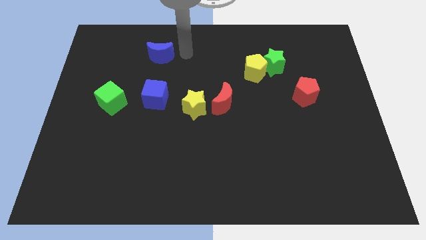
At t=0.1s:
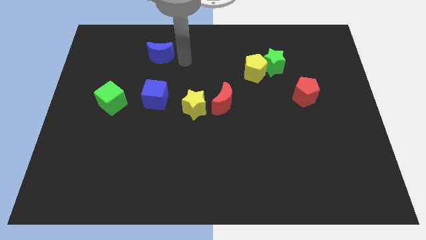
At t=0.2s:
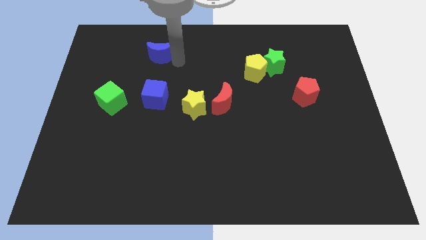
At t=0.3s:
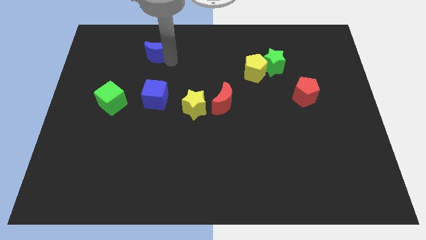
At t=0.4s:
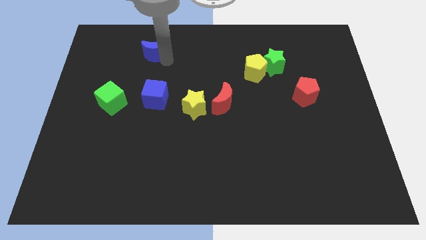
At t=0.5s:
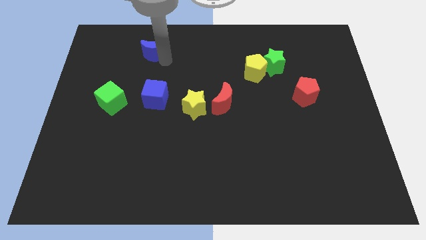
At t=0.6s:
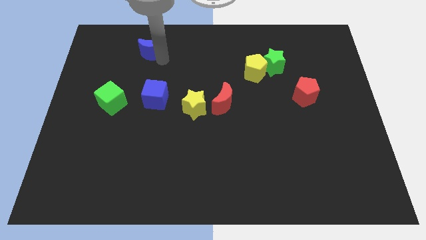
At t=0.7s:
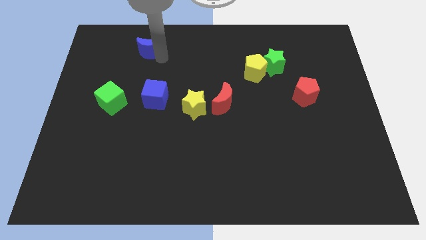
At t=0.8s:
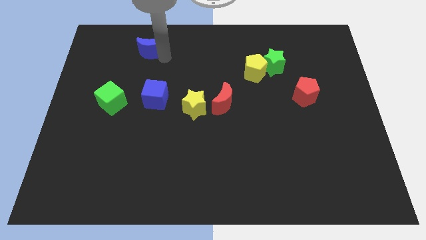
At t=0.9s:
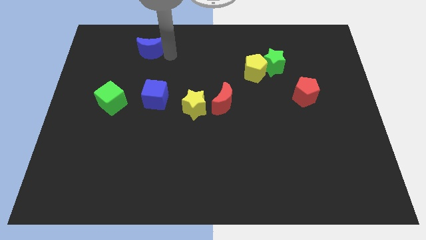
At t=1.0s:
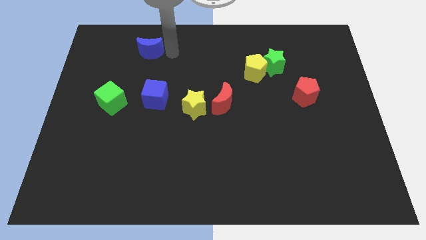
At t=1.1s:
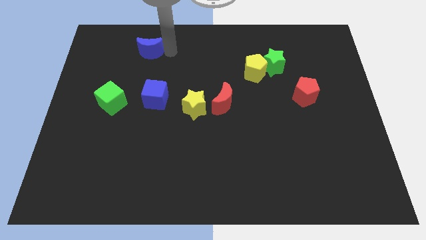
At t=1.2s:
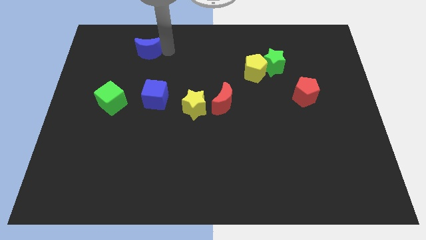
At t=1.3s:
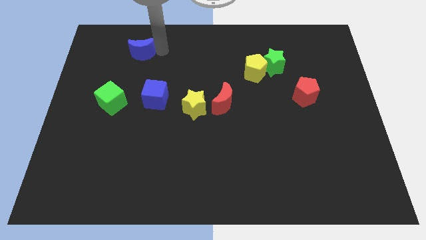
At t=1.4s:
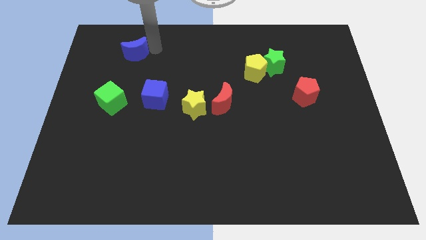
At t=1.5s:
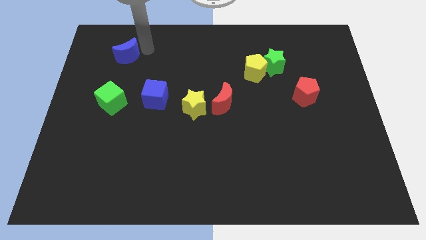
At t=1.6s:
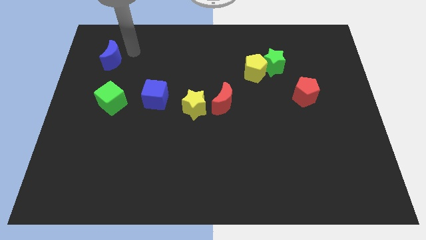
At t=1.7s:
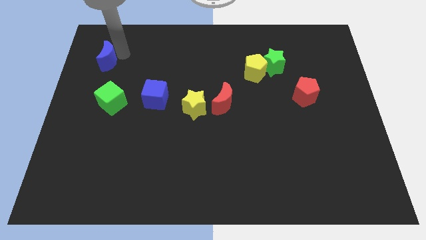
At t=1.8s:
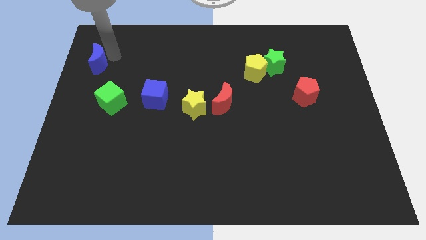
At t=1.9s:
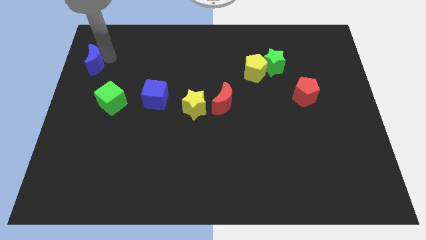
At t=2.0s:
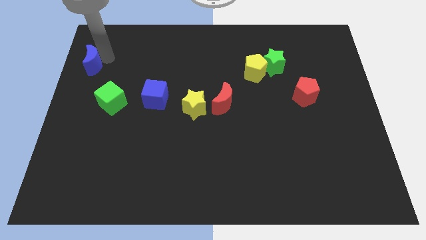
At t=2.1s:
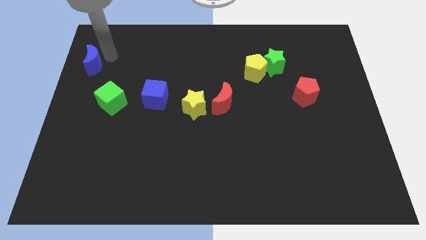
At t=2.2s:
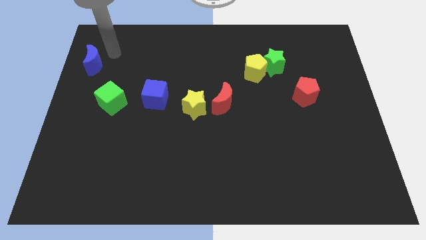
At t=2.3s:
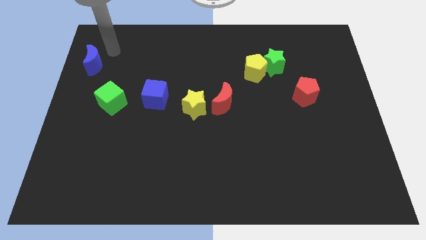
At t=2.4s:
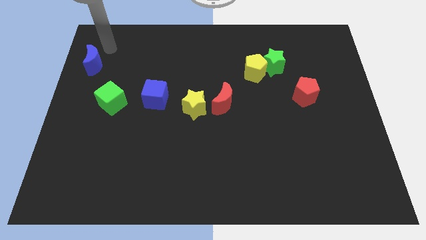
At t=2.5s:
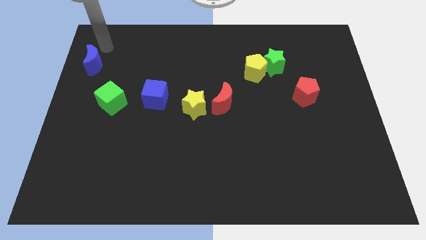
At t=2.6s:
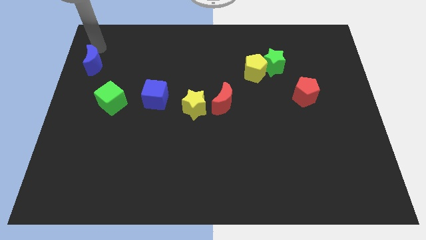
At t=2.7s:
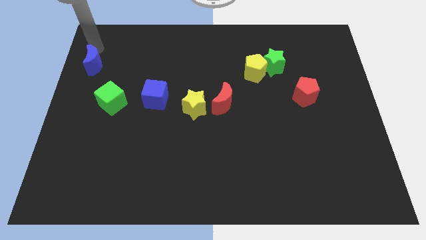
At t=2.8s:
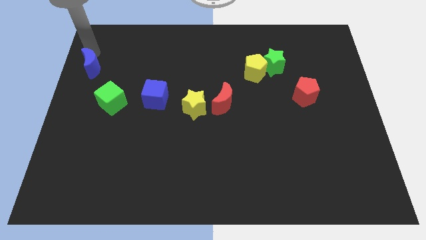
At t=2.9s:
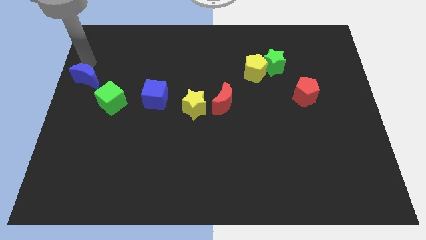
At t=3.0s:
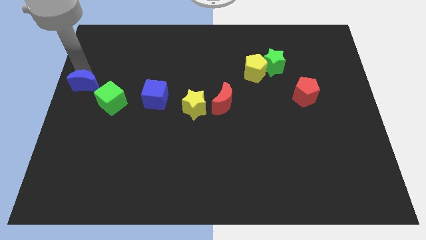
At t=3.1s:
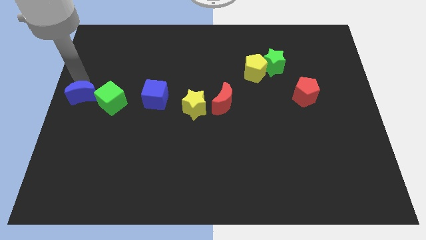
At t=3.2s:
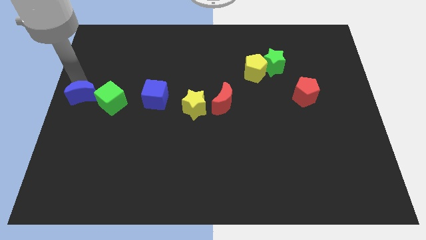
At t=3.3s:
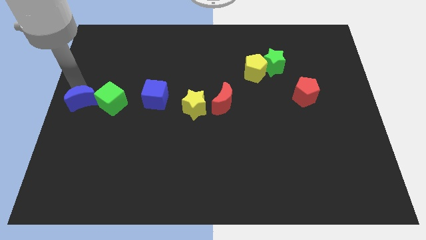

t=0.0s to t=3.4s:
slide the blue moon to the center left

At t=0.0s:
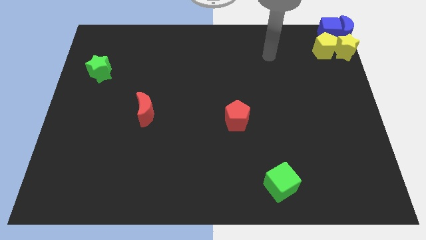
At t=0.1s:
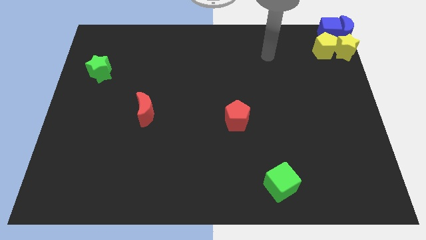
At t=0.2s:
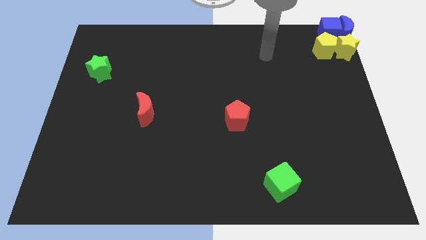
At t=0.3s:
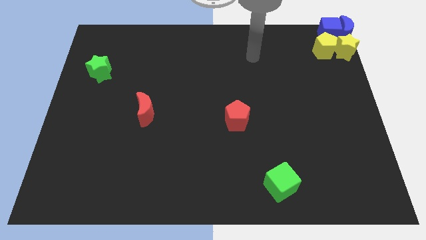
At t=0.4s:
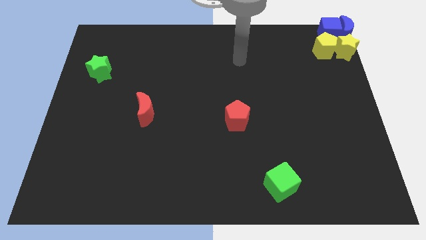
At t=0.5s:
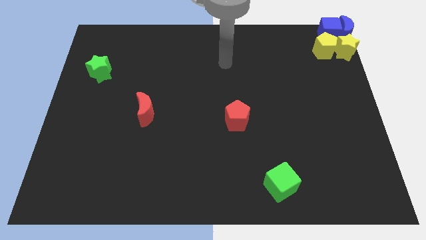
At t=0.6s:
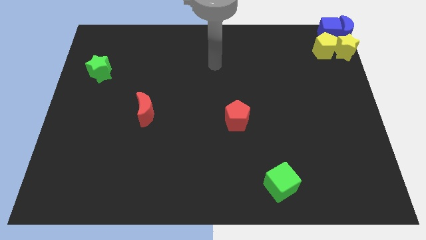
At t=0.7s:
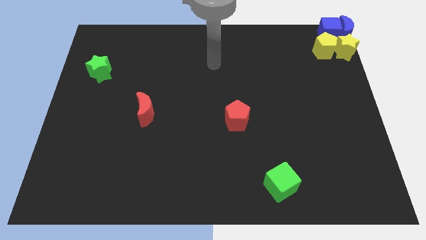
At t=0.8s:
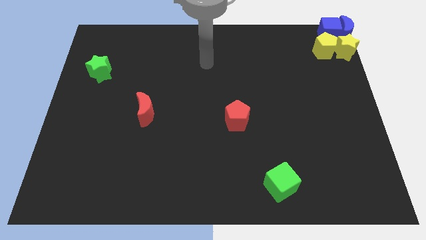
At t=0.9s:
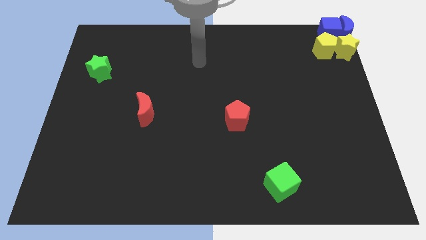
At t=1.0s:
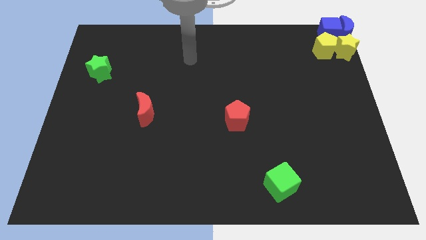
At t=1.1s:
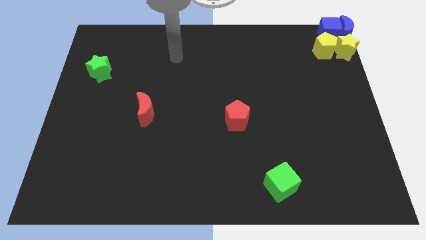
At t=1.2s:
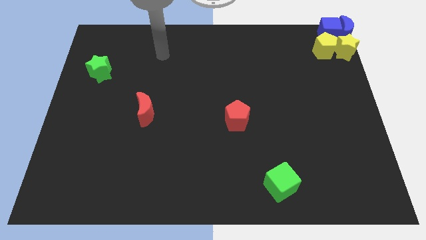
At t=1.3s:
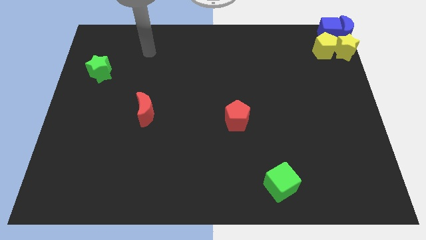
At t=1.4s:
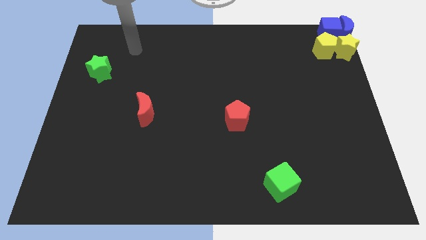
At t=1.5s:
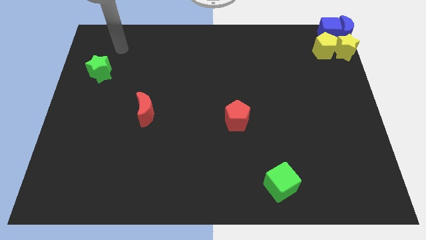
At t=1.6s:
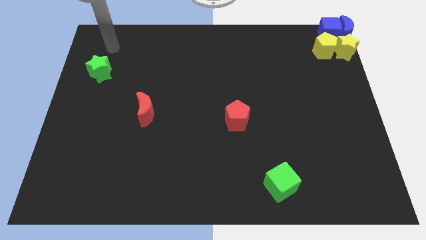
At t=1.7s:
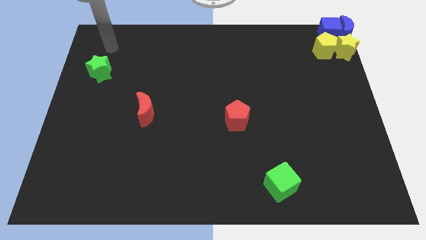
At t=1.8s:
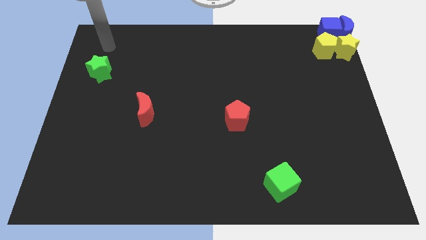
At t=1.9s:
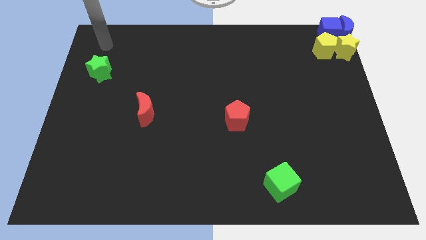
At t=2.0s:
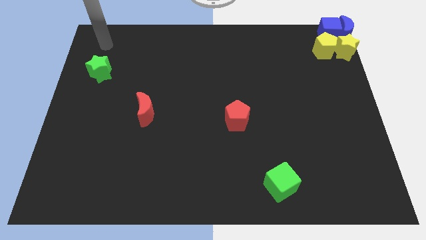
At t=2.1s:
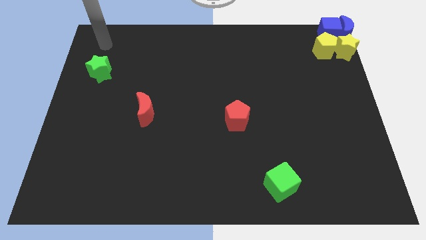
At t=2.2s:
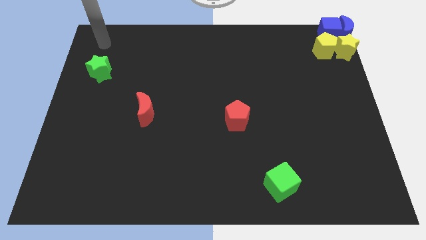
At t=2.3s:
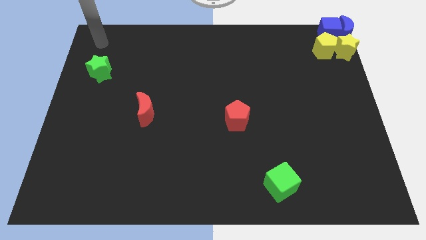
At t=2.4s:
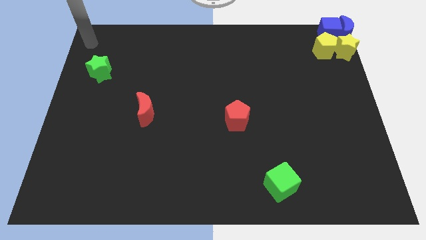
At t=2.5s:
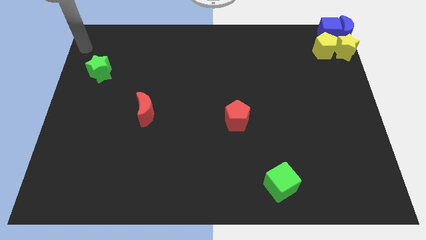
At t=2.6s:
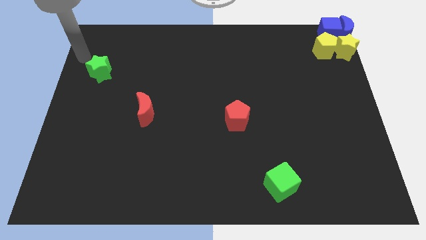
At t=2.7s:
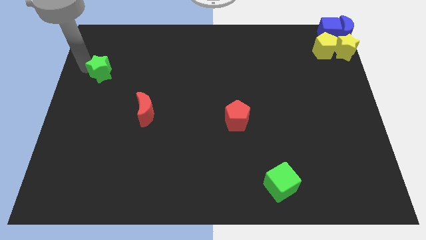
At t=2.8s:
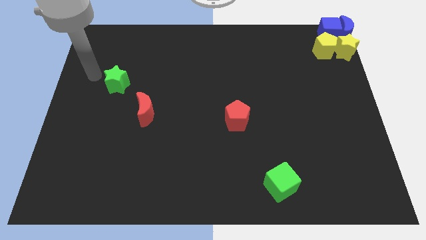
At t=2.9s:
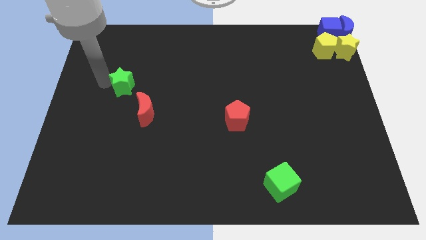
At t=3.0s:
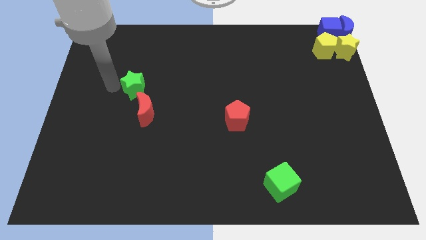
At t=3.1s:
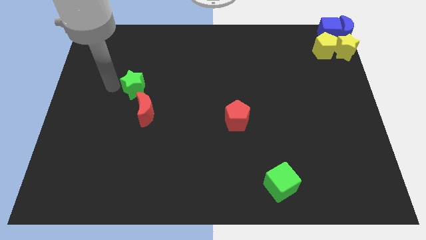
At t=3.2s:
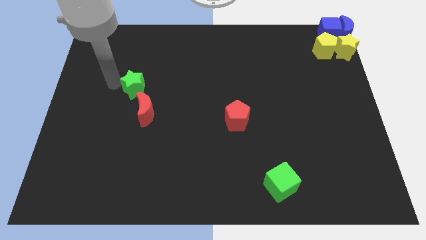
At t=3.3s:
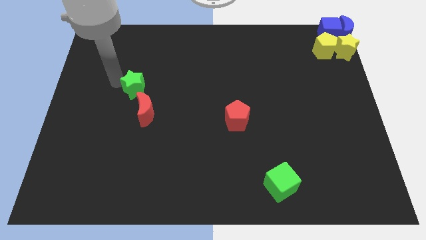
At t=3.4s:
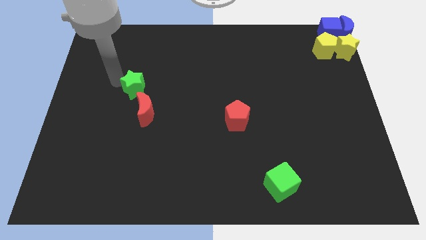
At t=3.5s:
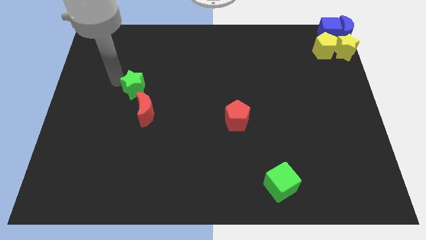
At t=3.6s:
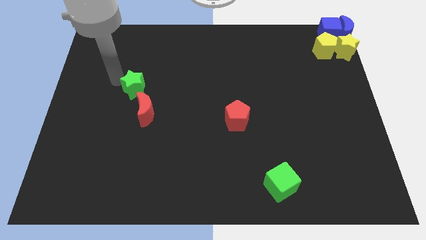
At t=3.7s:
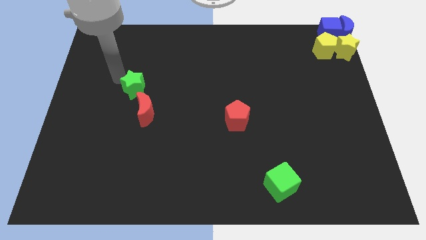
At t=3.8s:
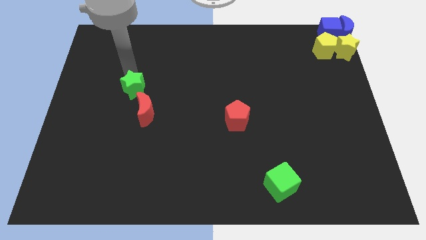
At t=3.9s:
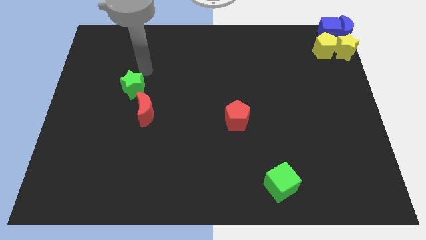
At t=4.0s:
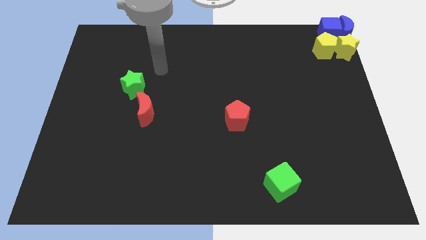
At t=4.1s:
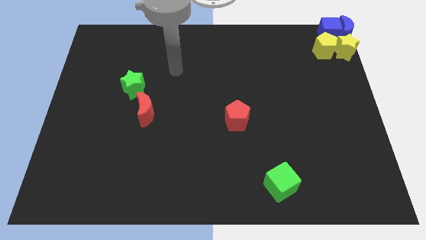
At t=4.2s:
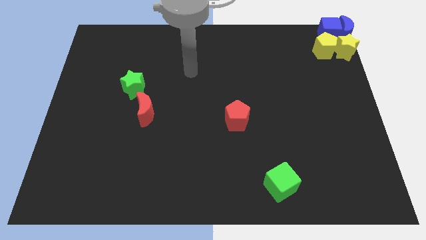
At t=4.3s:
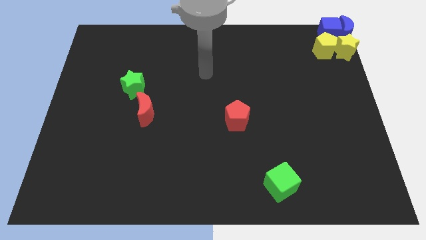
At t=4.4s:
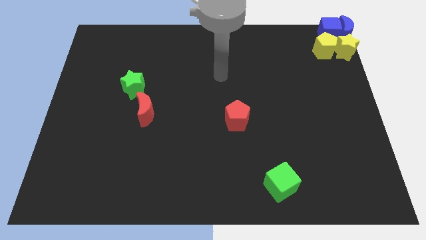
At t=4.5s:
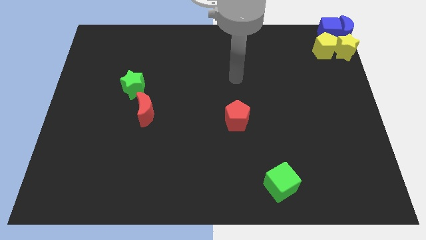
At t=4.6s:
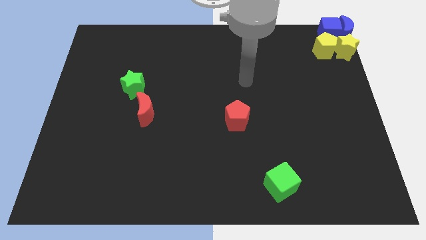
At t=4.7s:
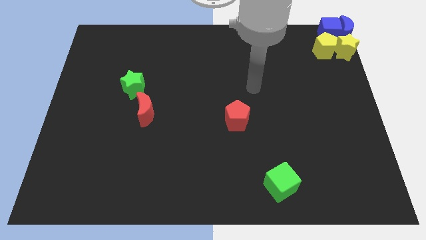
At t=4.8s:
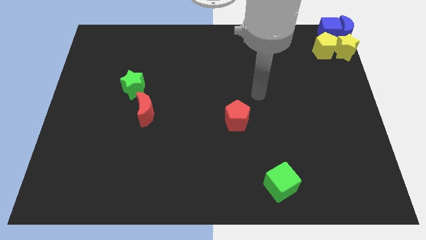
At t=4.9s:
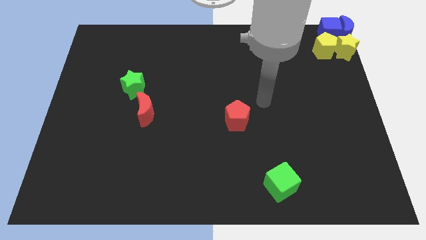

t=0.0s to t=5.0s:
push the green star to the top left of the red crescent

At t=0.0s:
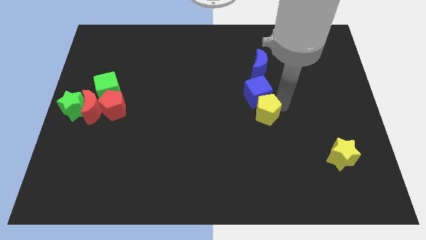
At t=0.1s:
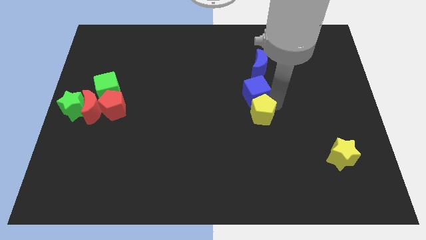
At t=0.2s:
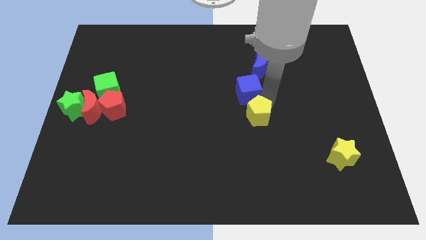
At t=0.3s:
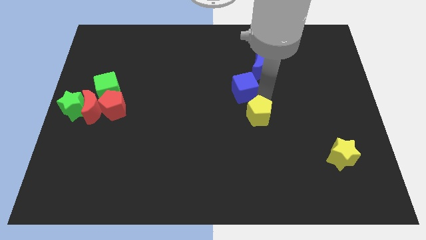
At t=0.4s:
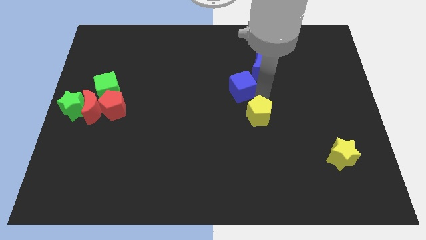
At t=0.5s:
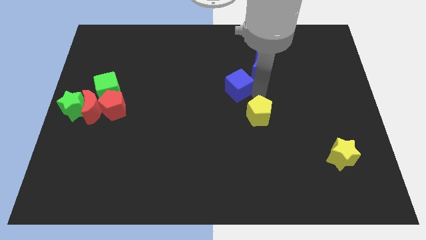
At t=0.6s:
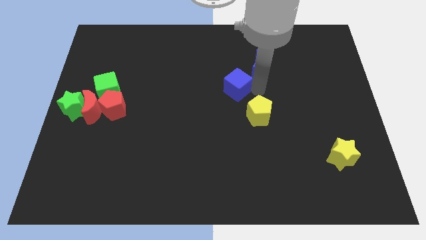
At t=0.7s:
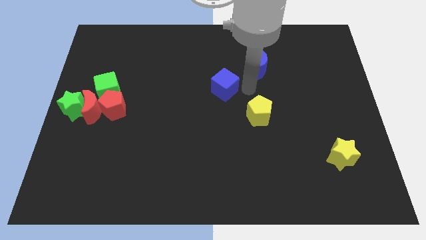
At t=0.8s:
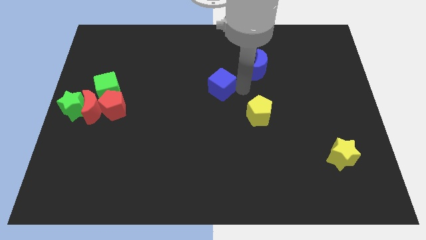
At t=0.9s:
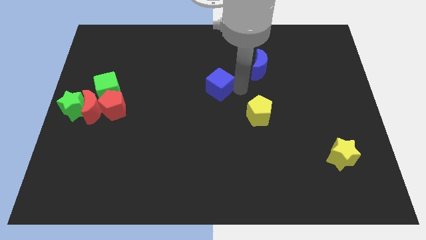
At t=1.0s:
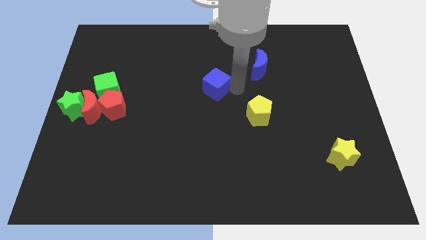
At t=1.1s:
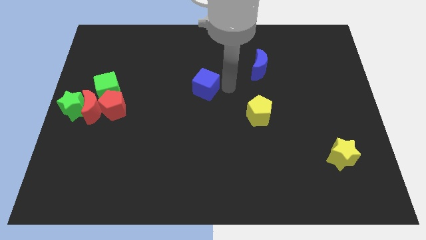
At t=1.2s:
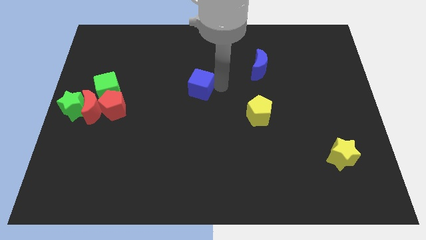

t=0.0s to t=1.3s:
separate blue cube from yellow pentagon
